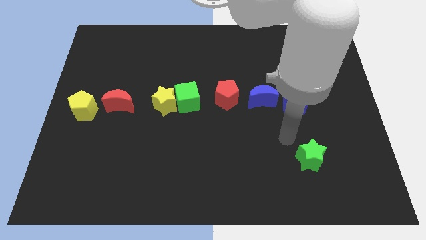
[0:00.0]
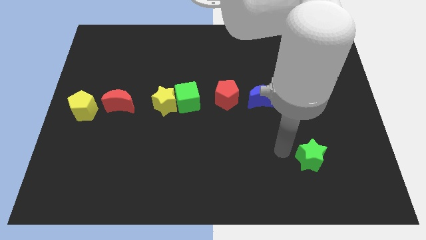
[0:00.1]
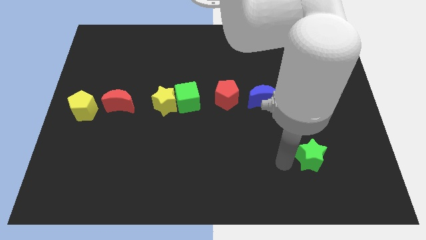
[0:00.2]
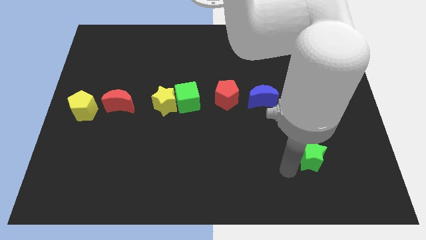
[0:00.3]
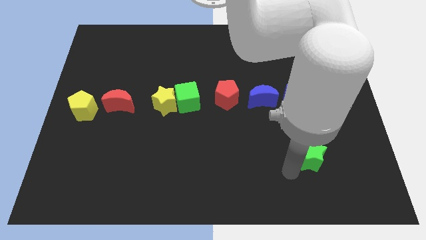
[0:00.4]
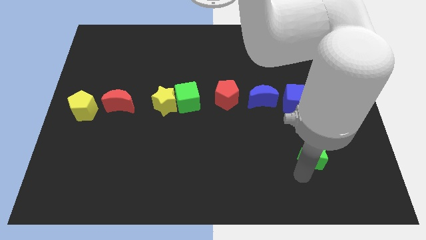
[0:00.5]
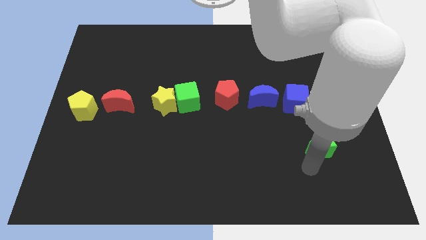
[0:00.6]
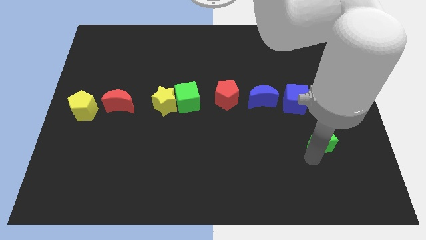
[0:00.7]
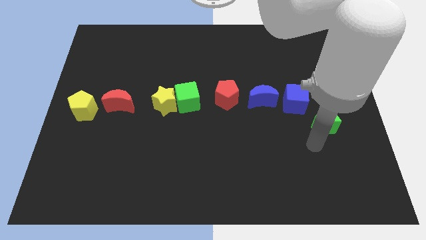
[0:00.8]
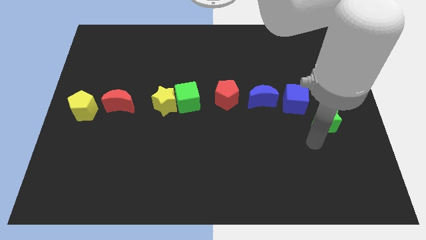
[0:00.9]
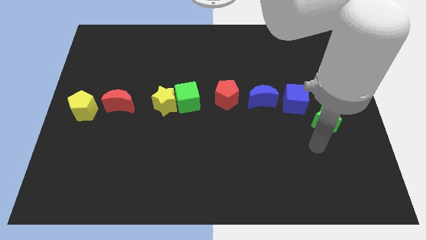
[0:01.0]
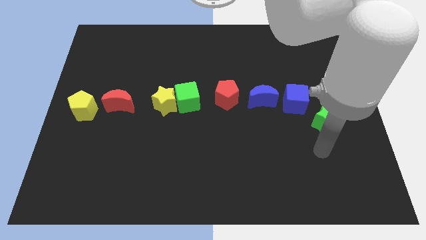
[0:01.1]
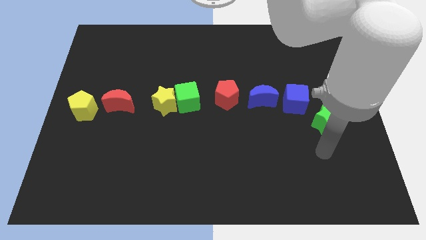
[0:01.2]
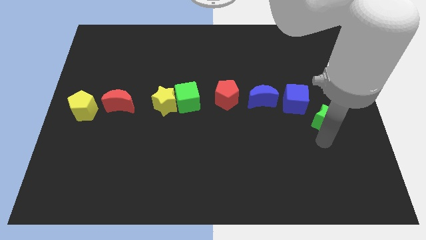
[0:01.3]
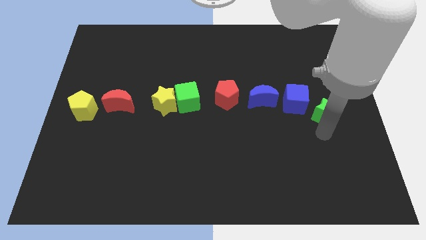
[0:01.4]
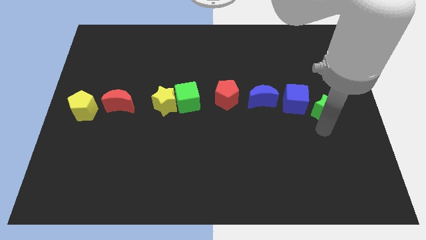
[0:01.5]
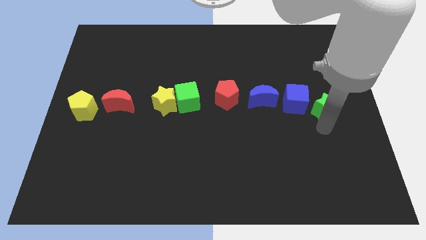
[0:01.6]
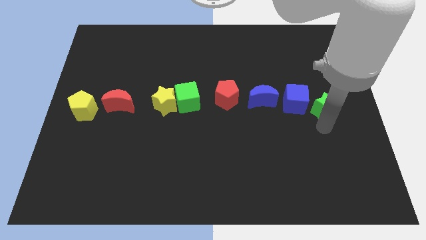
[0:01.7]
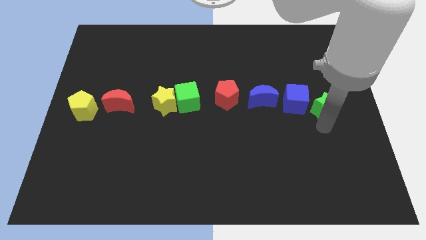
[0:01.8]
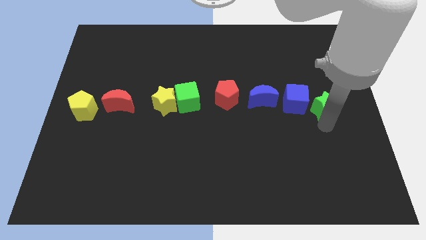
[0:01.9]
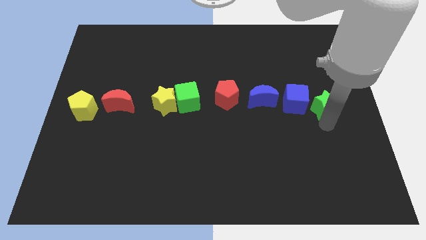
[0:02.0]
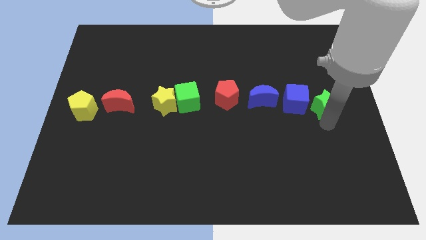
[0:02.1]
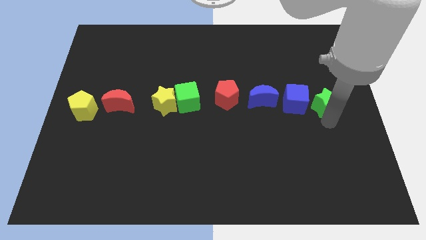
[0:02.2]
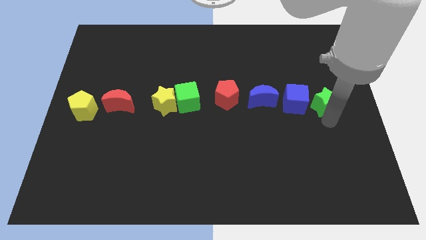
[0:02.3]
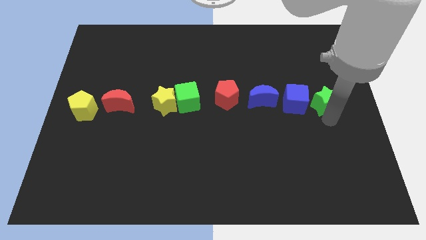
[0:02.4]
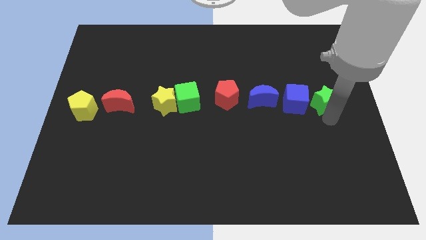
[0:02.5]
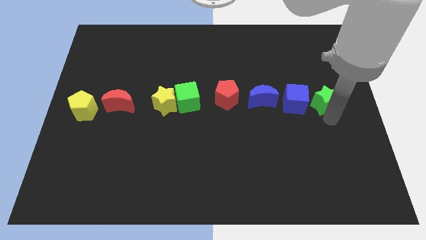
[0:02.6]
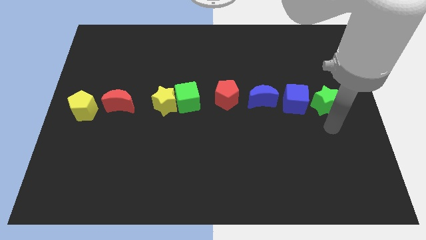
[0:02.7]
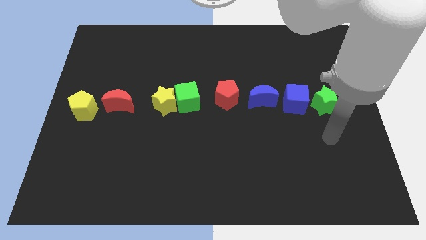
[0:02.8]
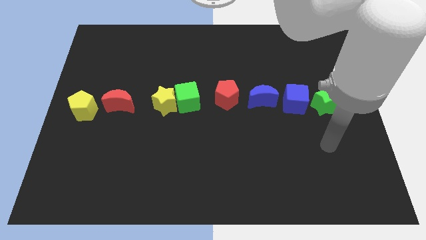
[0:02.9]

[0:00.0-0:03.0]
move the green star to the right of the blue cube

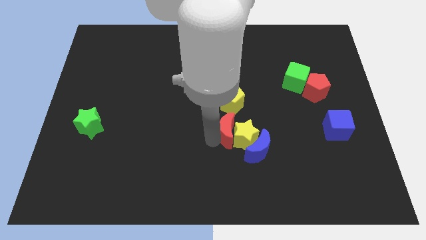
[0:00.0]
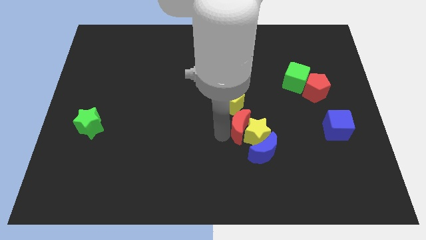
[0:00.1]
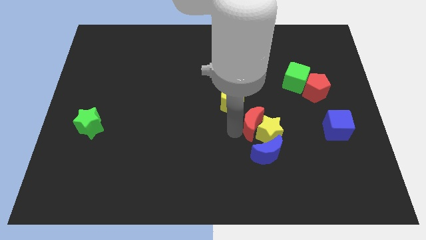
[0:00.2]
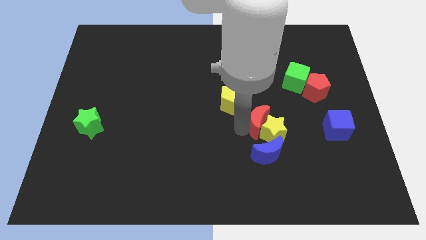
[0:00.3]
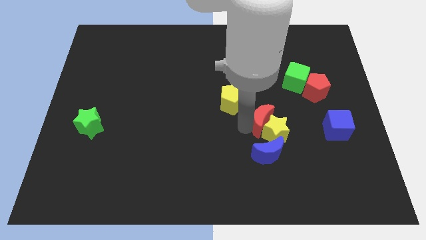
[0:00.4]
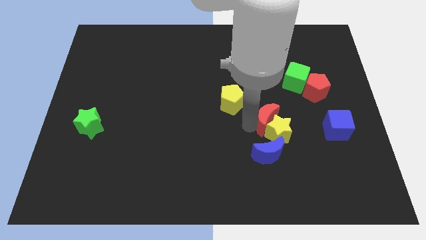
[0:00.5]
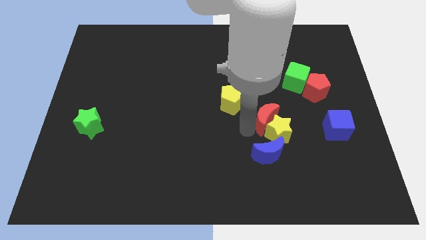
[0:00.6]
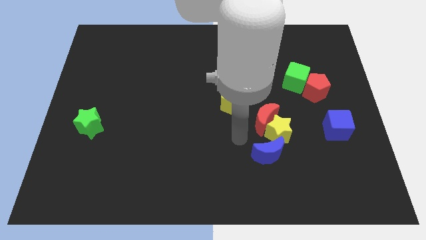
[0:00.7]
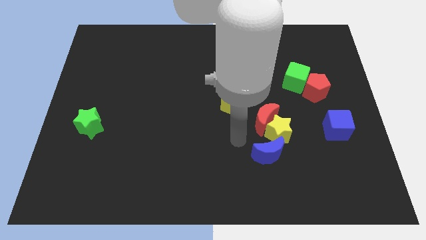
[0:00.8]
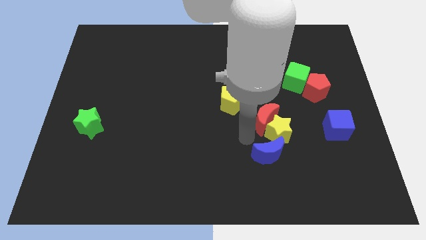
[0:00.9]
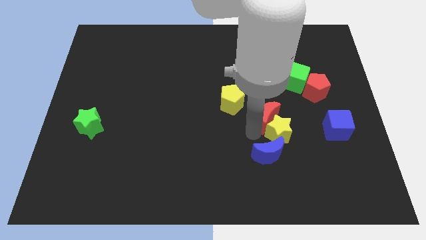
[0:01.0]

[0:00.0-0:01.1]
push the red crescent slightly towards right side

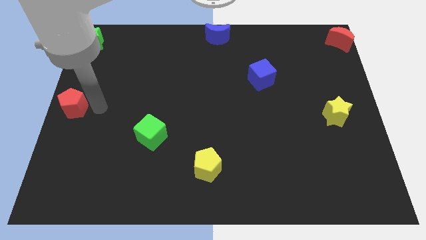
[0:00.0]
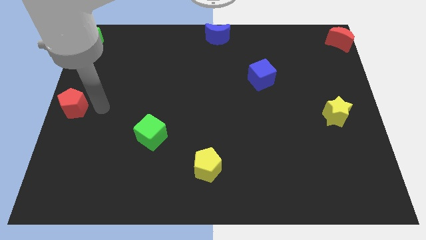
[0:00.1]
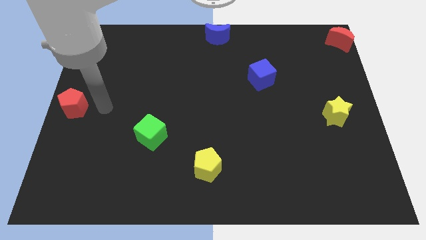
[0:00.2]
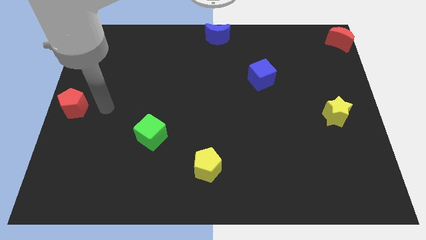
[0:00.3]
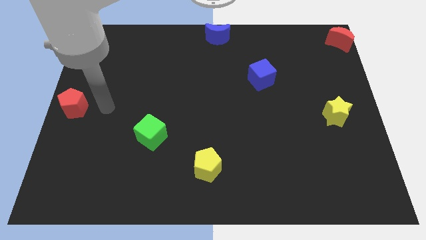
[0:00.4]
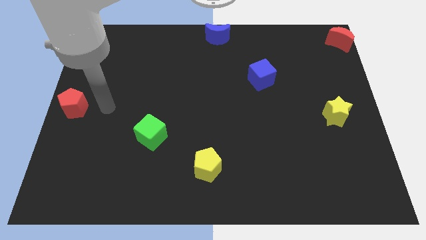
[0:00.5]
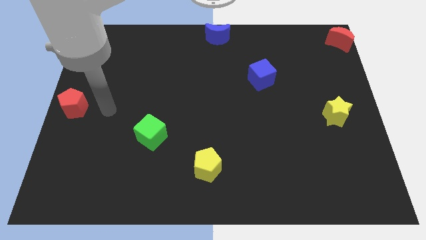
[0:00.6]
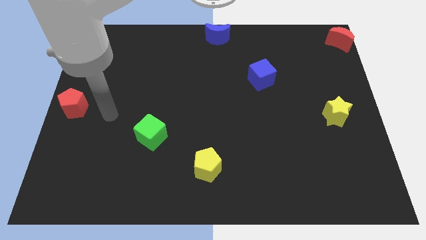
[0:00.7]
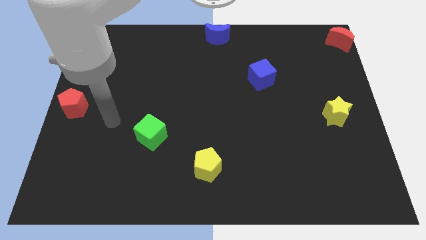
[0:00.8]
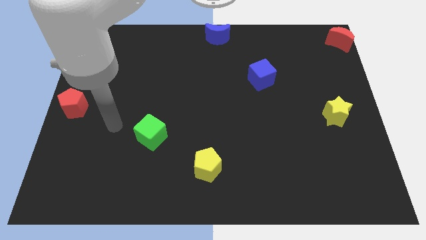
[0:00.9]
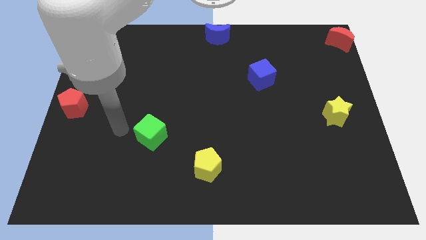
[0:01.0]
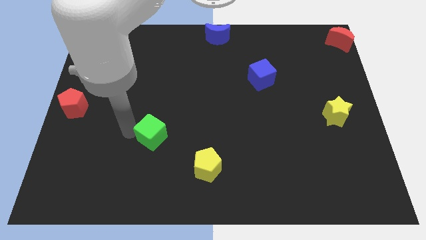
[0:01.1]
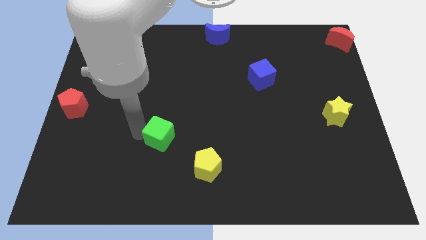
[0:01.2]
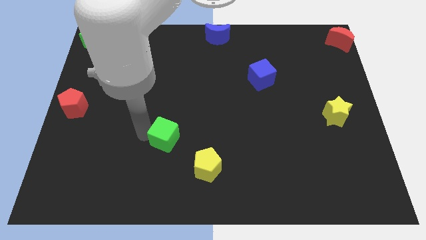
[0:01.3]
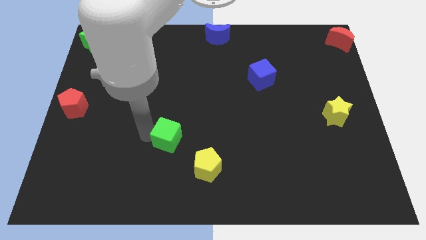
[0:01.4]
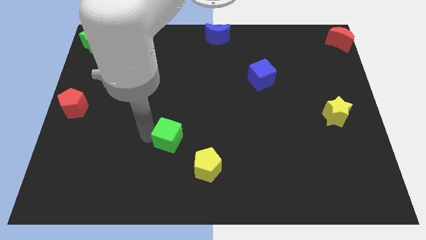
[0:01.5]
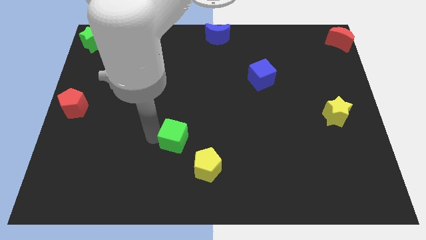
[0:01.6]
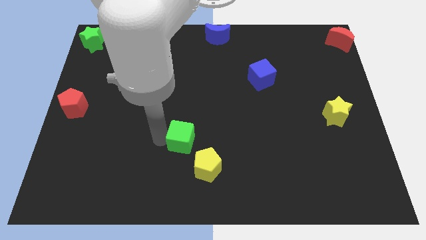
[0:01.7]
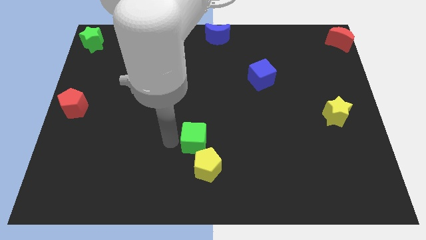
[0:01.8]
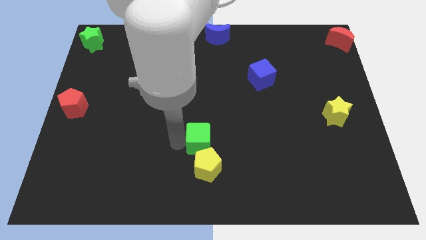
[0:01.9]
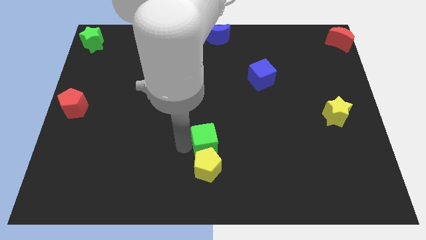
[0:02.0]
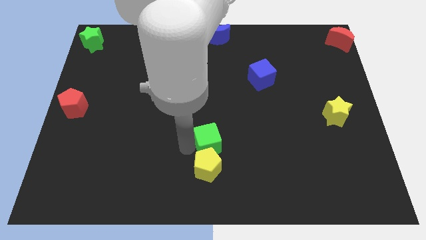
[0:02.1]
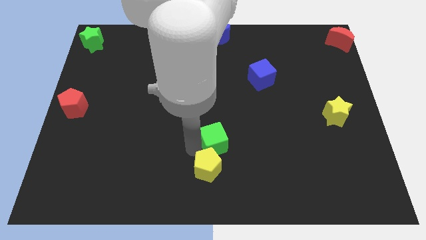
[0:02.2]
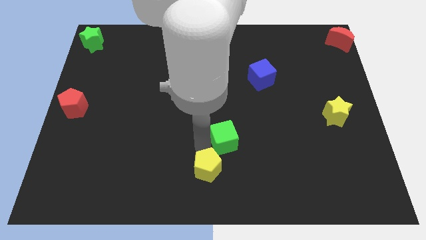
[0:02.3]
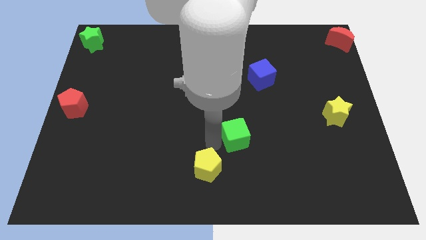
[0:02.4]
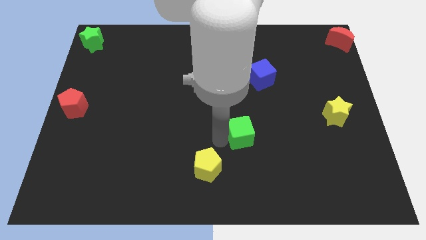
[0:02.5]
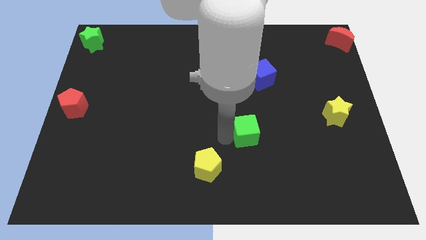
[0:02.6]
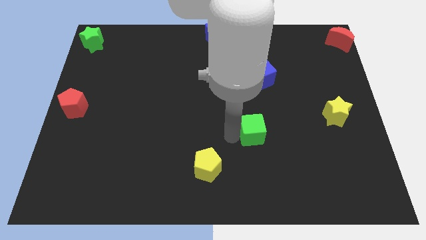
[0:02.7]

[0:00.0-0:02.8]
move the green cube to the diagonal top right side of the yellow pentagon

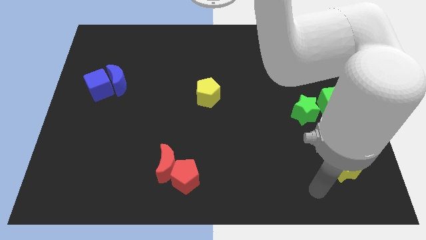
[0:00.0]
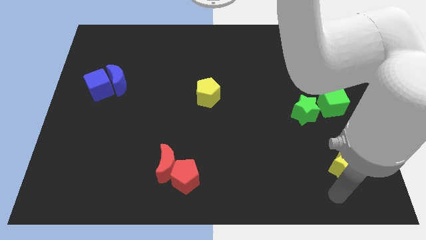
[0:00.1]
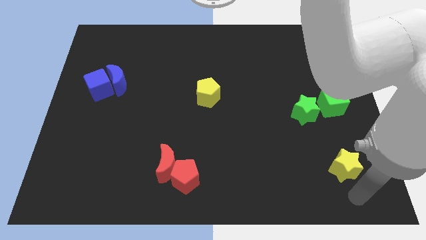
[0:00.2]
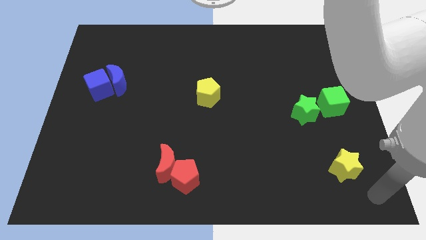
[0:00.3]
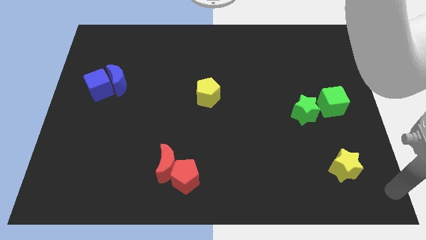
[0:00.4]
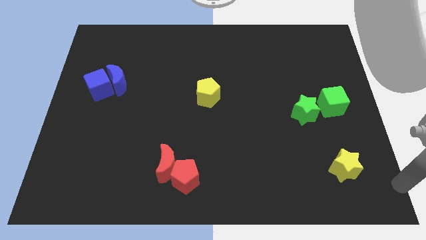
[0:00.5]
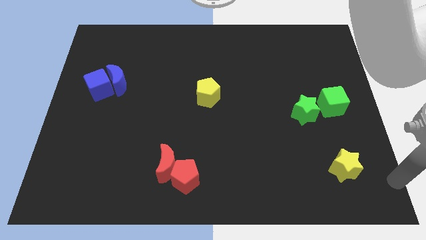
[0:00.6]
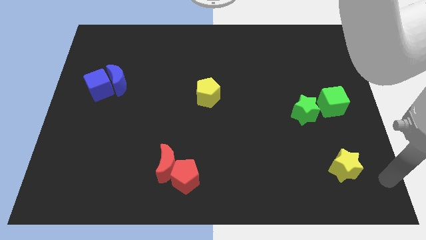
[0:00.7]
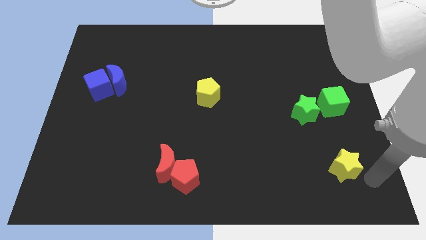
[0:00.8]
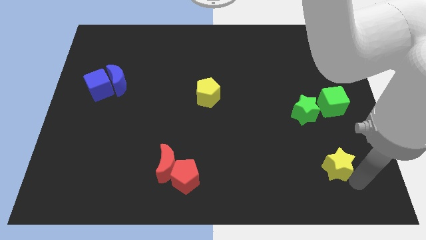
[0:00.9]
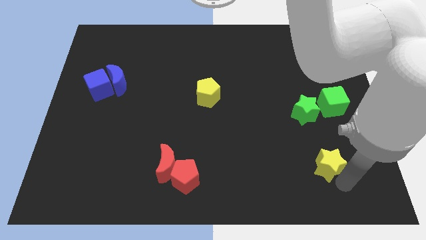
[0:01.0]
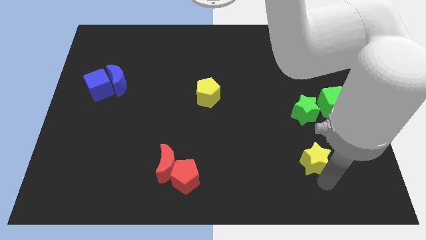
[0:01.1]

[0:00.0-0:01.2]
slightly push the yellow star to the bottom side of the green star

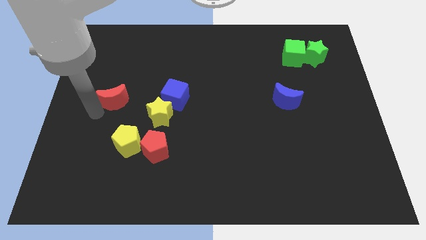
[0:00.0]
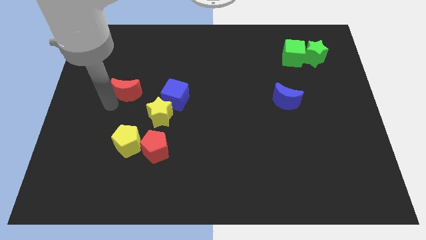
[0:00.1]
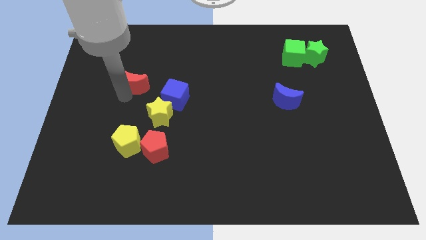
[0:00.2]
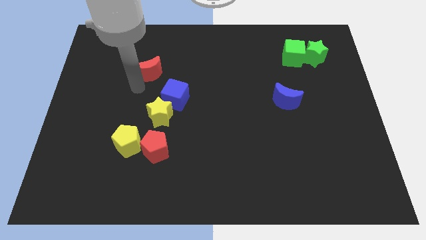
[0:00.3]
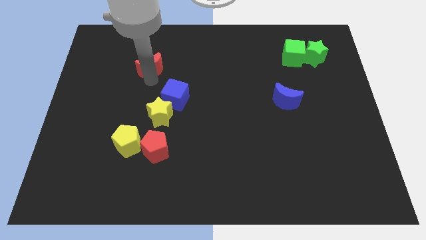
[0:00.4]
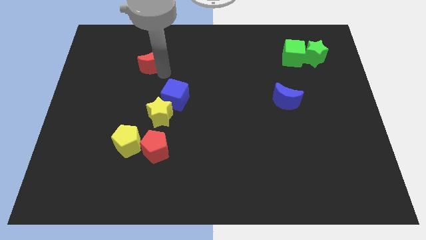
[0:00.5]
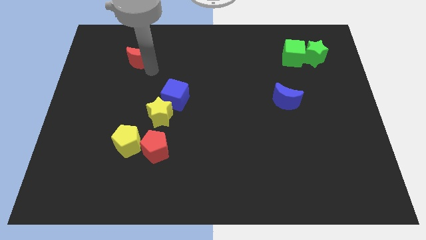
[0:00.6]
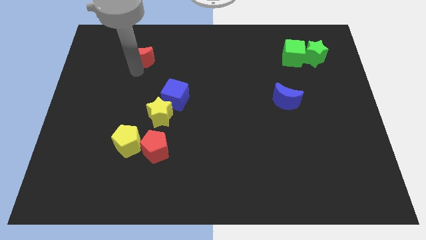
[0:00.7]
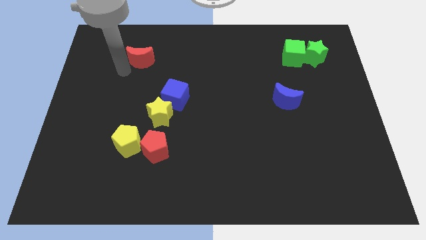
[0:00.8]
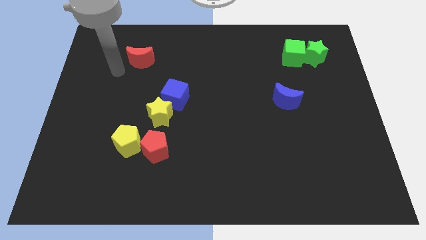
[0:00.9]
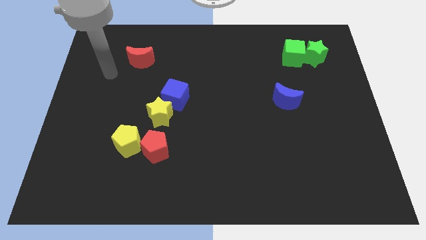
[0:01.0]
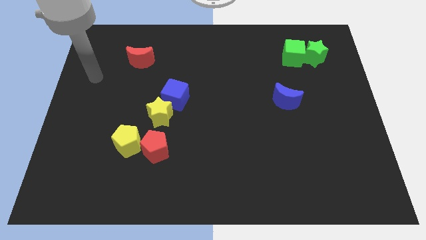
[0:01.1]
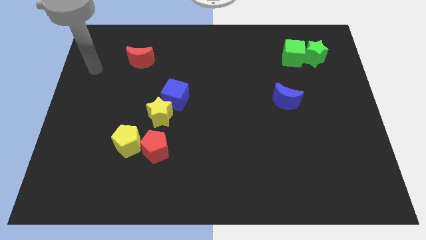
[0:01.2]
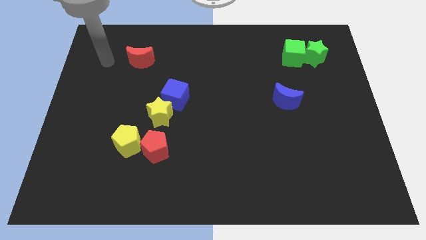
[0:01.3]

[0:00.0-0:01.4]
slide the red moon diagonally top left to the blue cube
